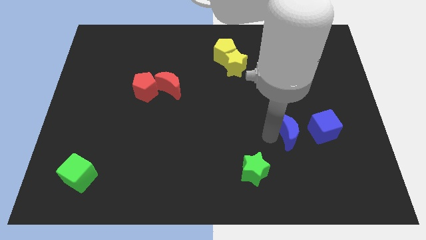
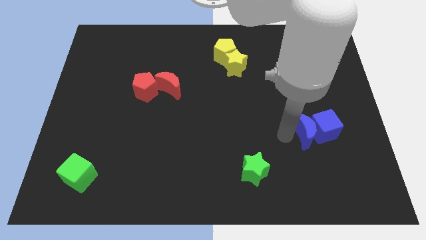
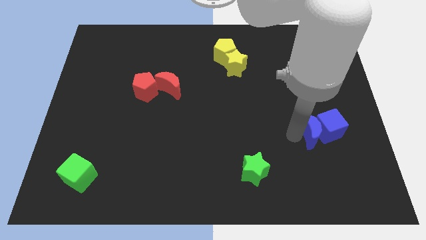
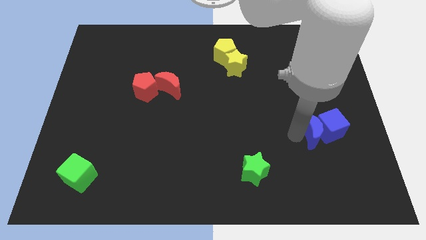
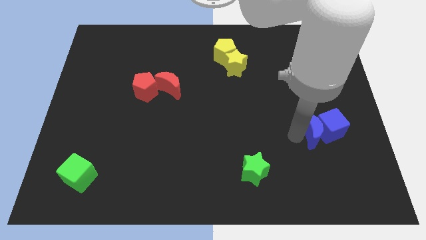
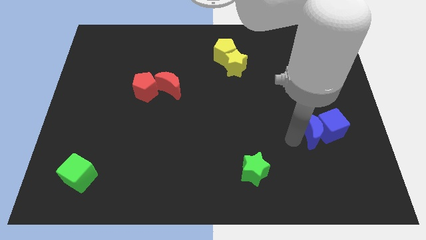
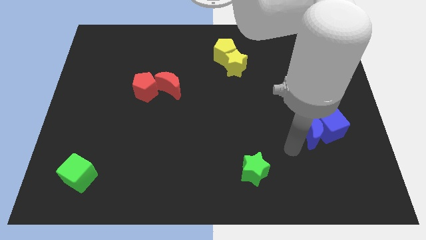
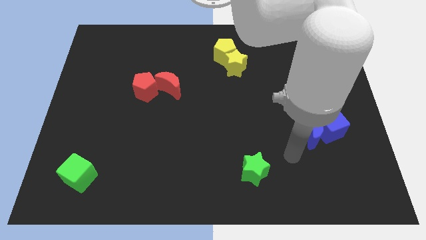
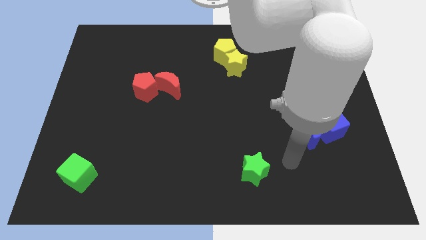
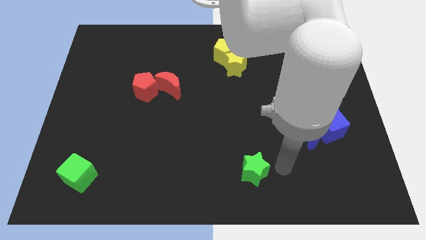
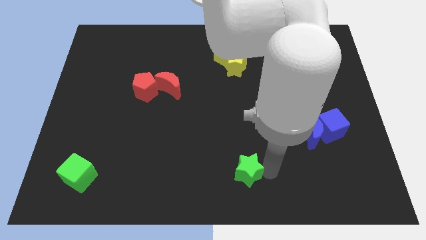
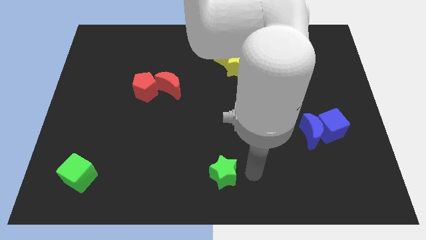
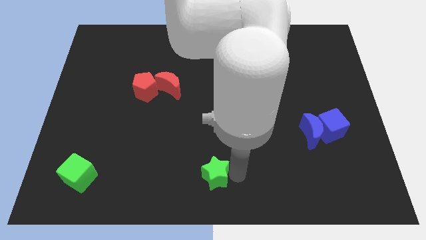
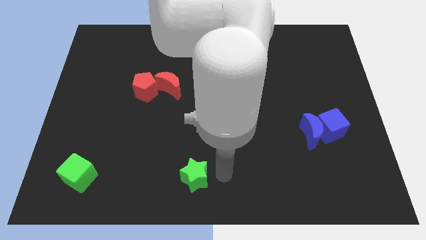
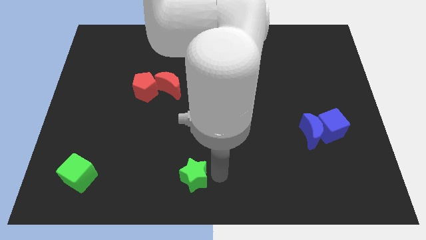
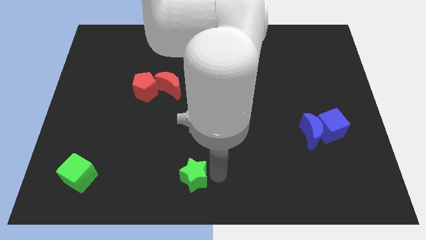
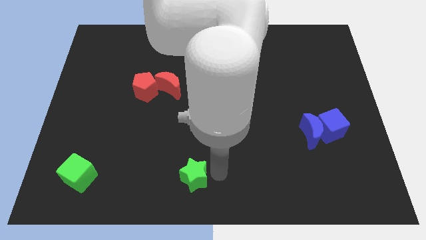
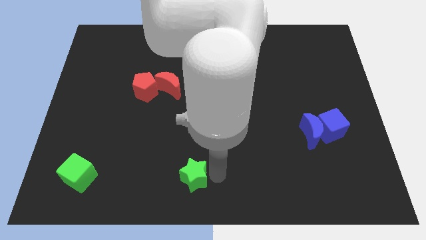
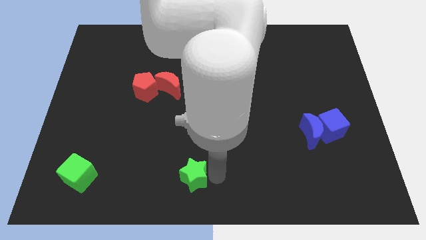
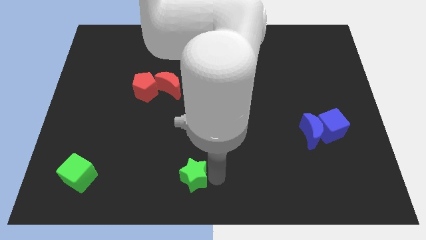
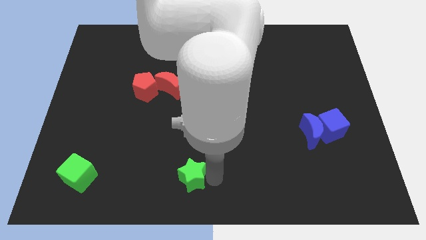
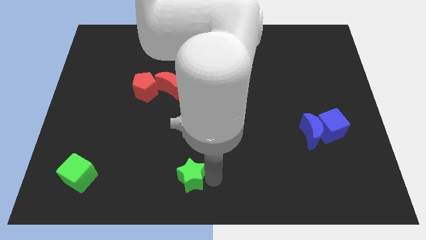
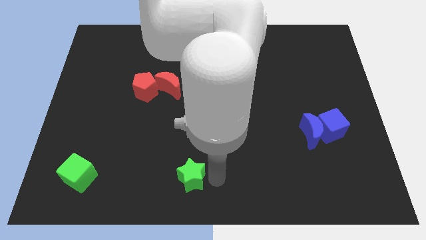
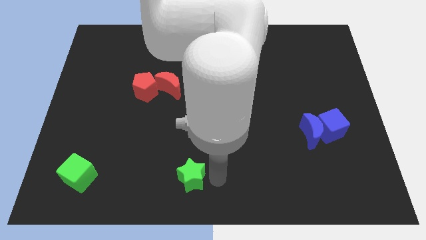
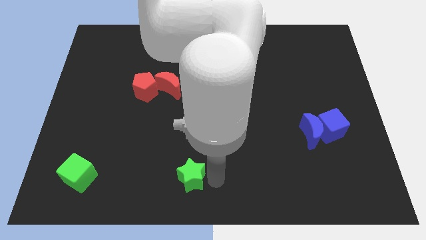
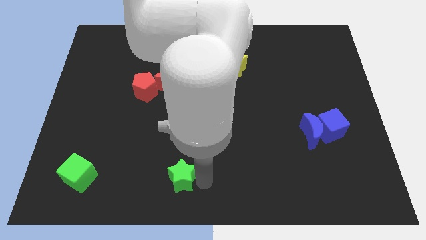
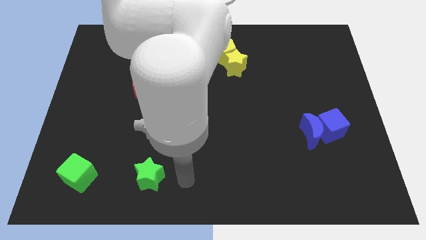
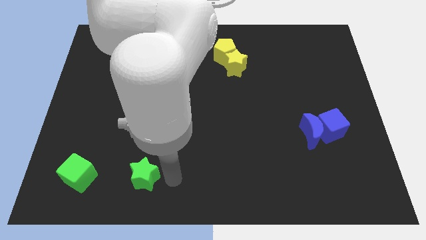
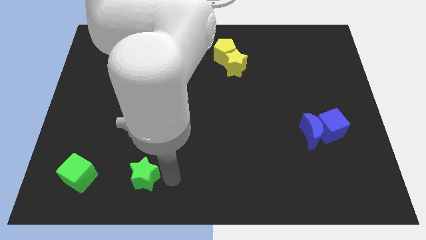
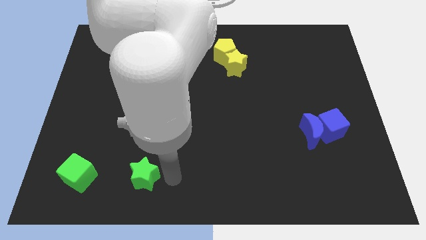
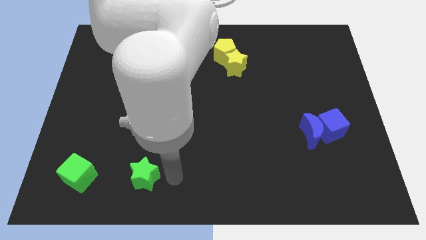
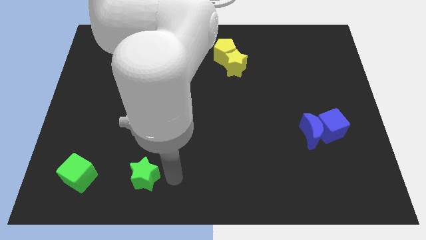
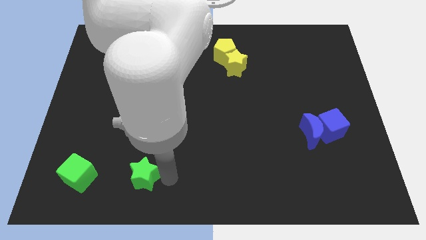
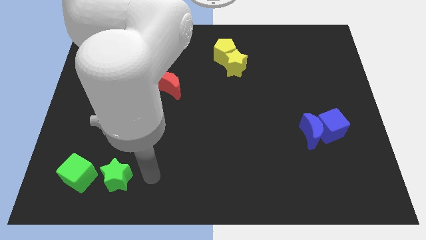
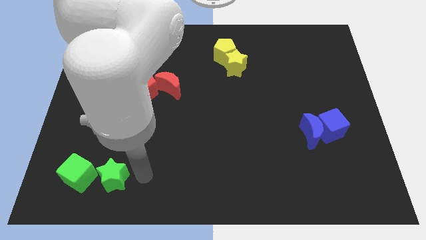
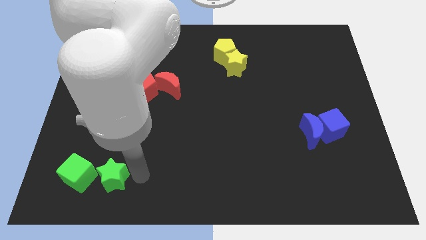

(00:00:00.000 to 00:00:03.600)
move the green star towards the green cube

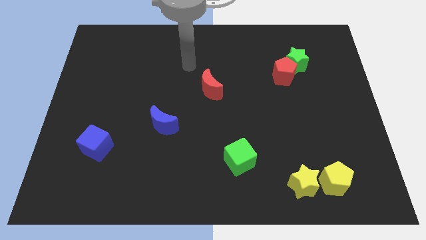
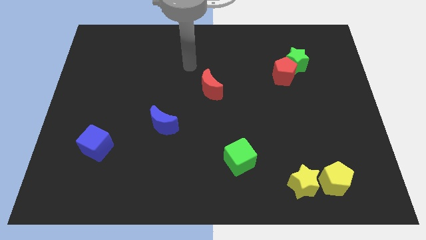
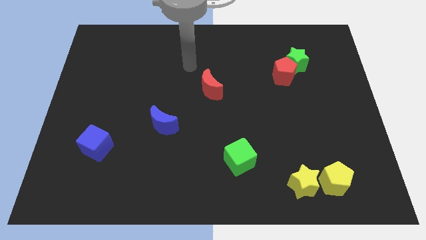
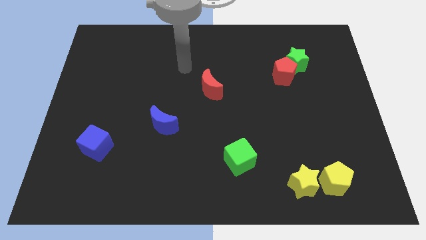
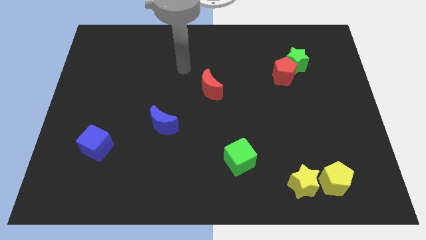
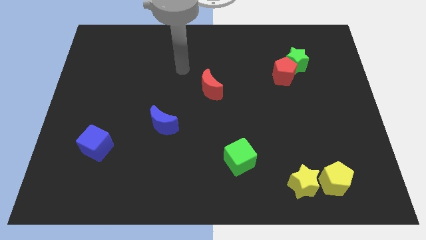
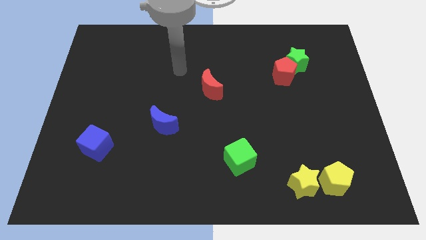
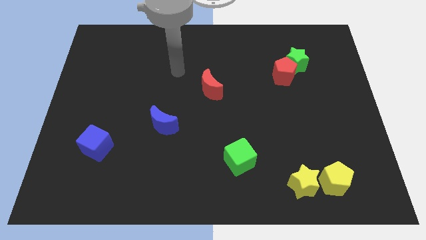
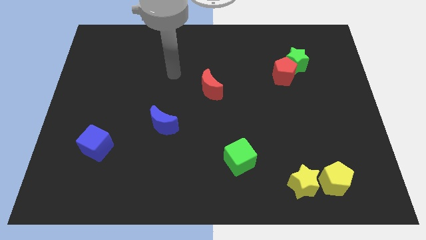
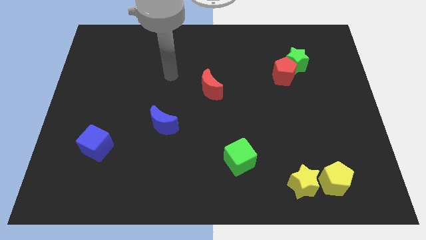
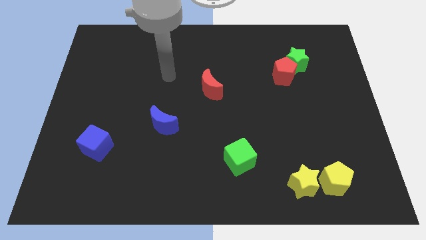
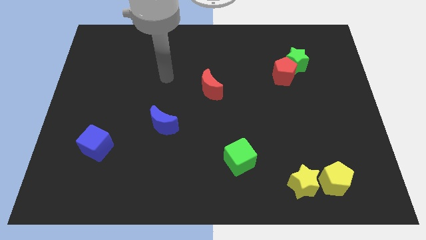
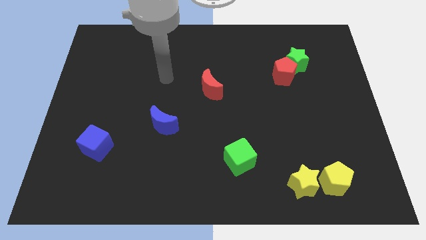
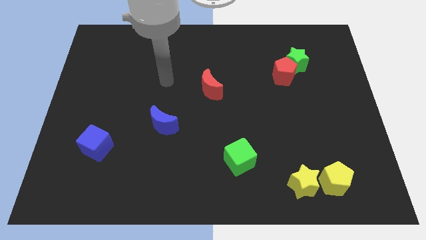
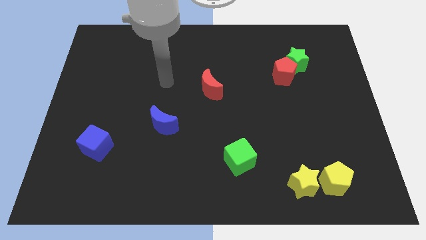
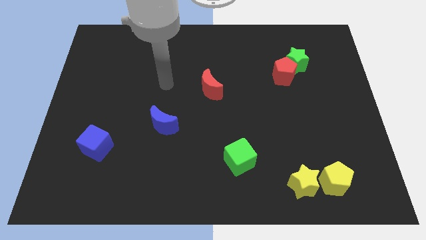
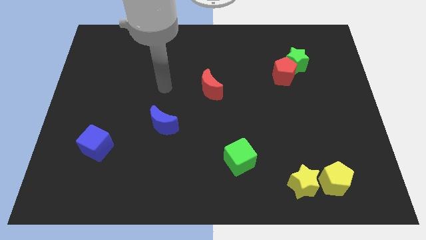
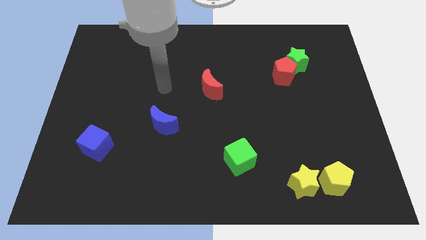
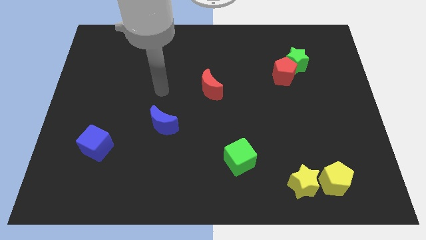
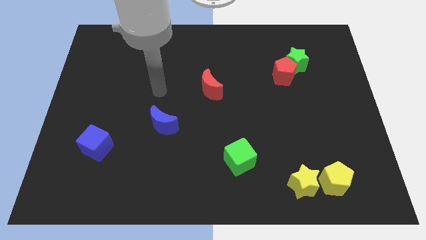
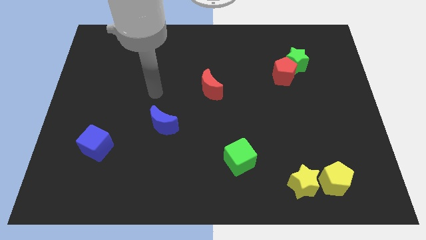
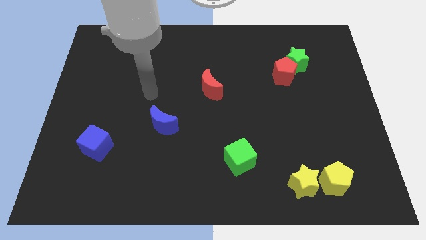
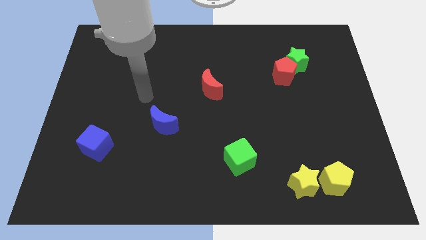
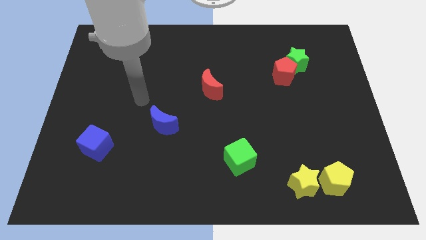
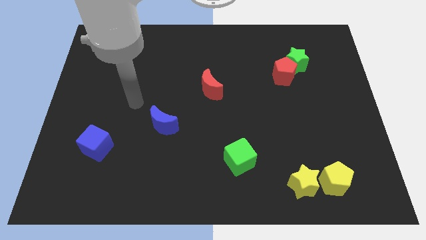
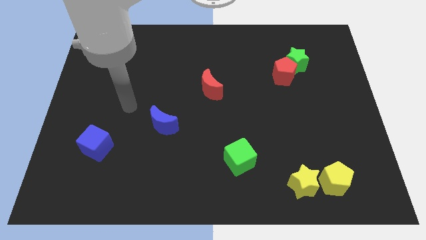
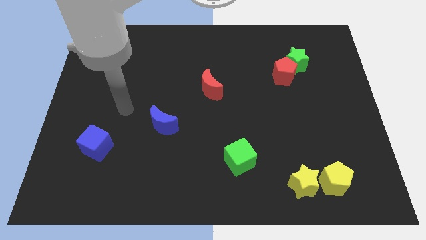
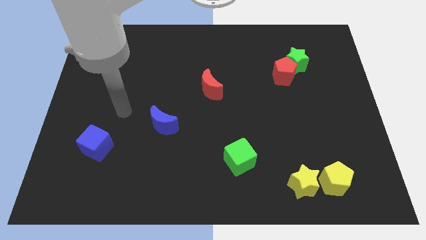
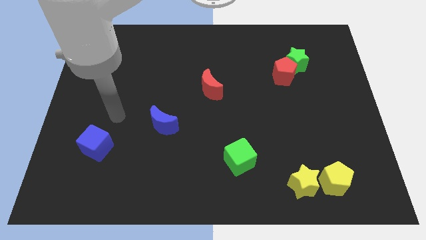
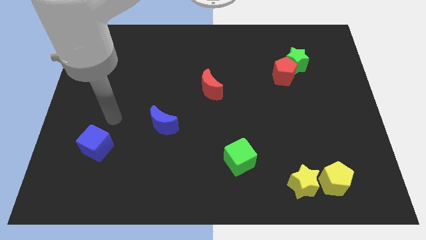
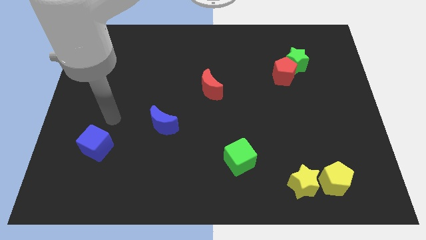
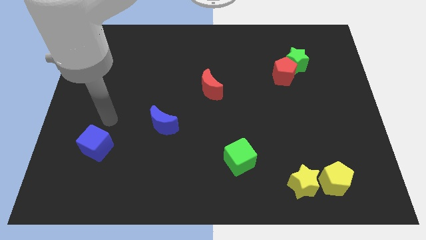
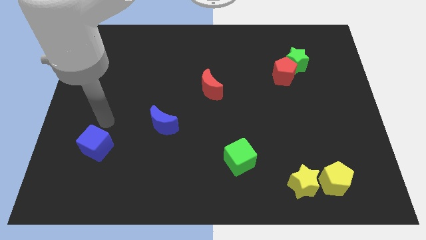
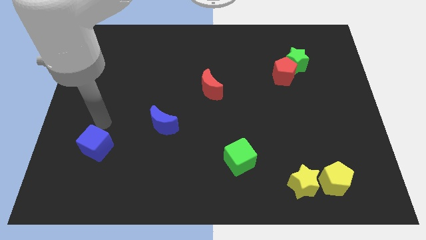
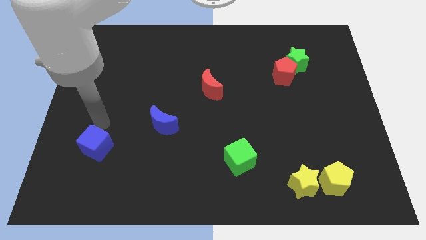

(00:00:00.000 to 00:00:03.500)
move the arm from center to left of the board

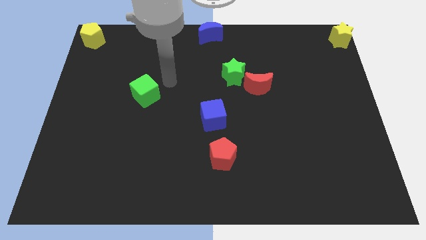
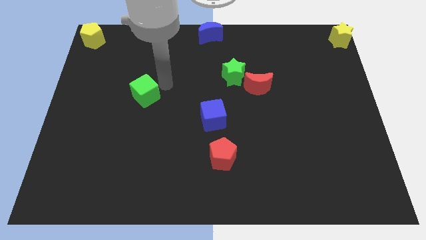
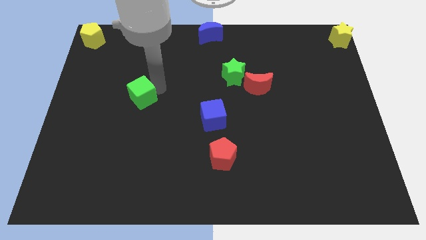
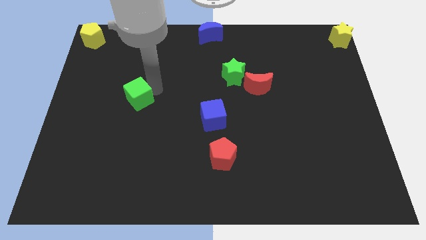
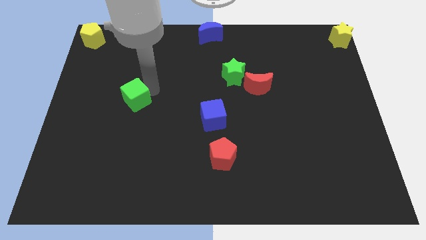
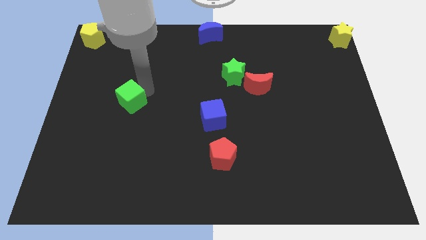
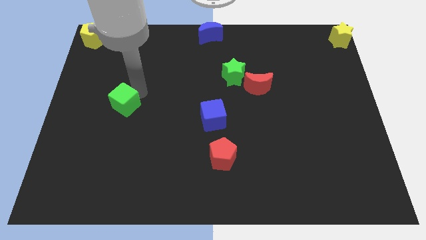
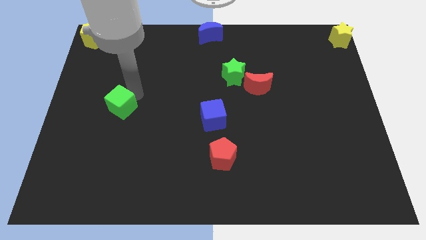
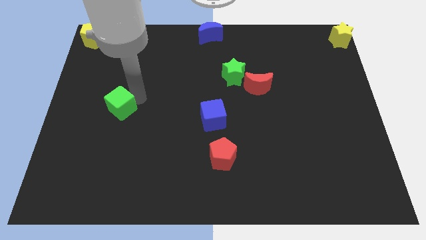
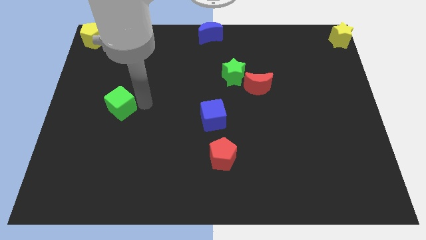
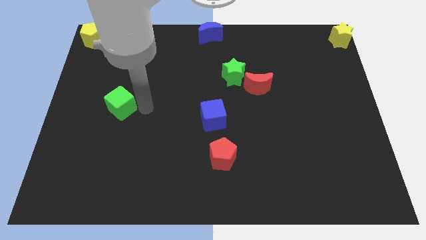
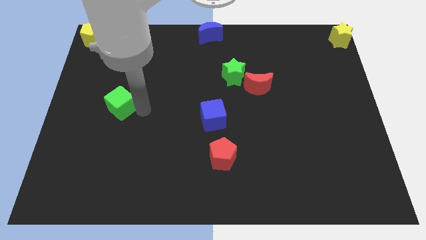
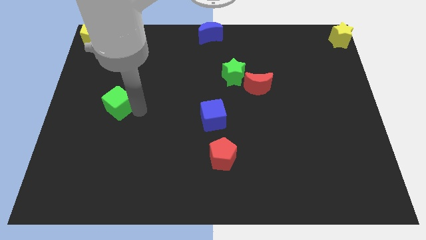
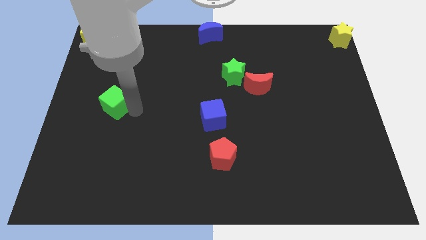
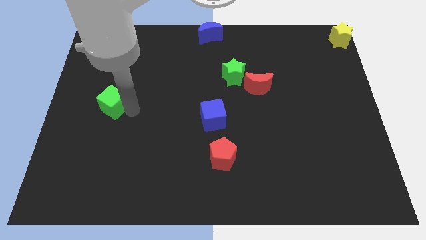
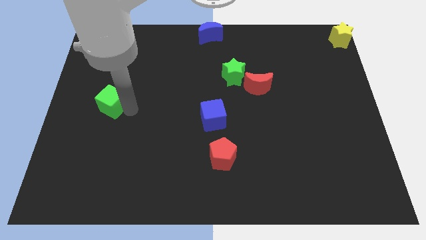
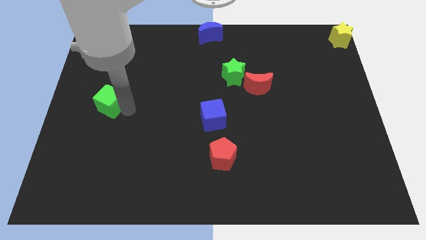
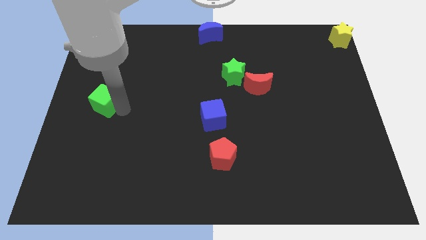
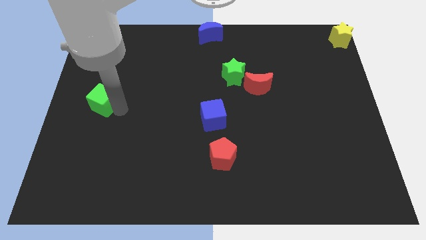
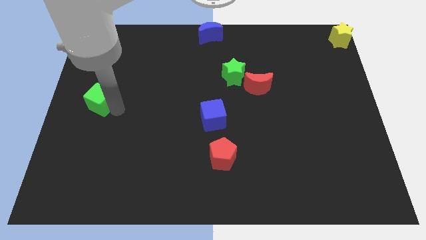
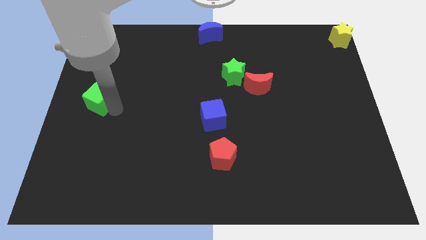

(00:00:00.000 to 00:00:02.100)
drag the green cube towards the center left of the board

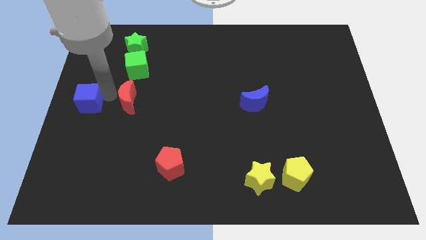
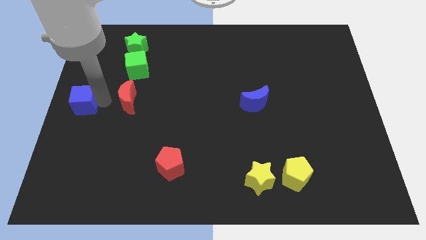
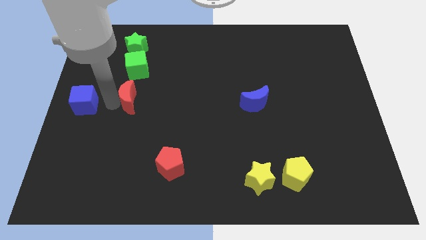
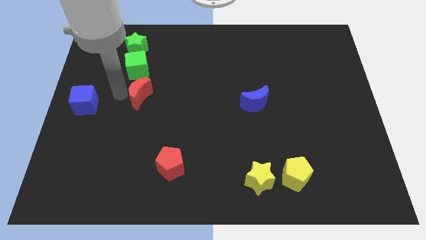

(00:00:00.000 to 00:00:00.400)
slightly move the blue cube towards the left center of the board
